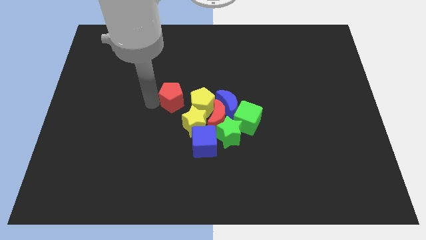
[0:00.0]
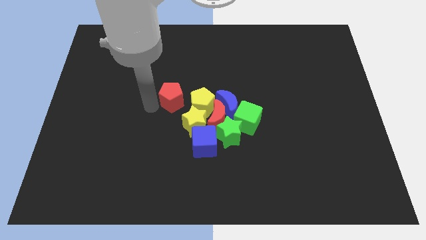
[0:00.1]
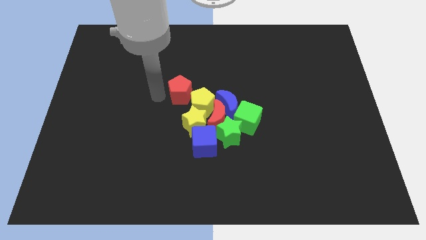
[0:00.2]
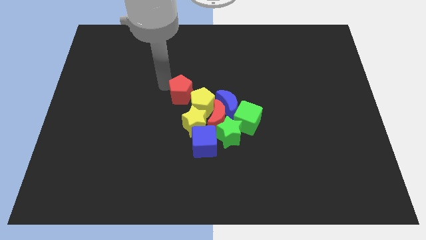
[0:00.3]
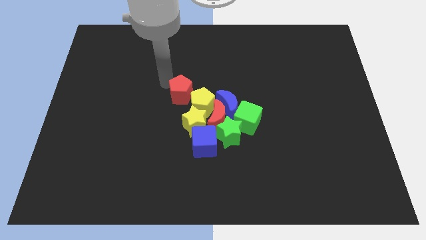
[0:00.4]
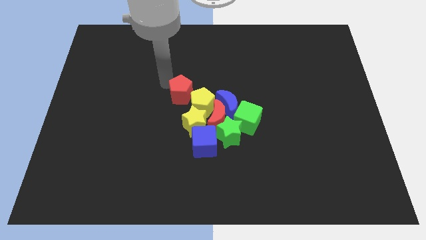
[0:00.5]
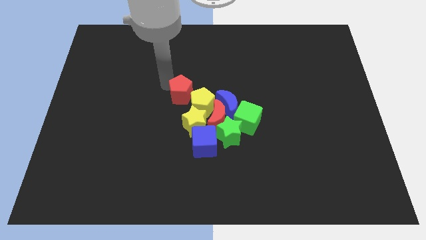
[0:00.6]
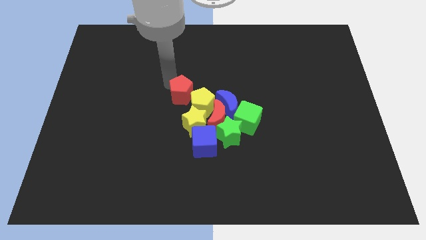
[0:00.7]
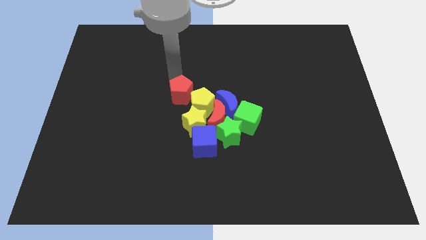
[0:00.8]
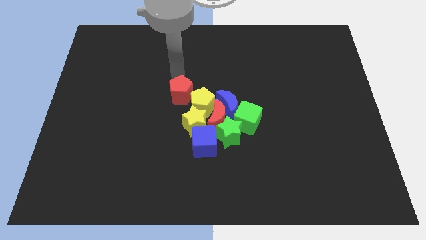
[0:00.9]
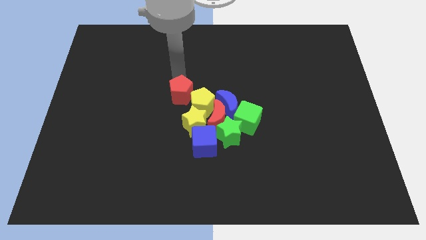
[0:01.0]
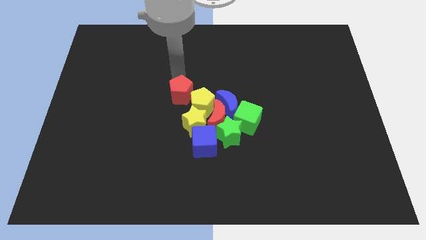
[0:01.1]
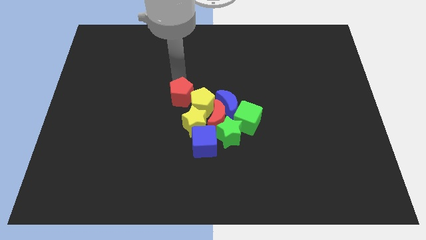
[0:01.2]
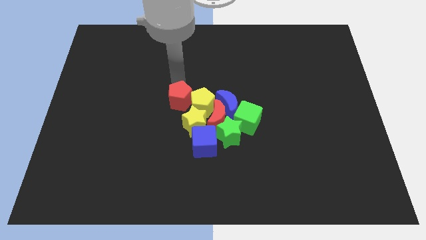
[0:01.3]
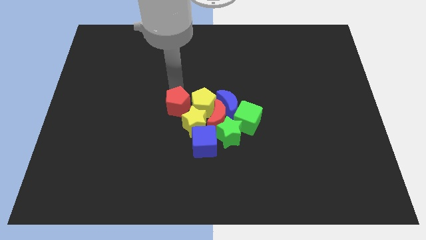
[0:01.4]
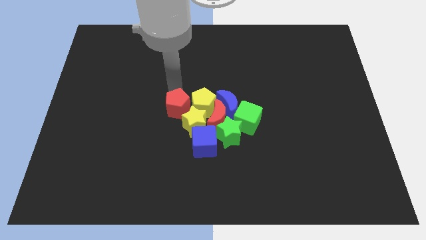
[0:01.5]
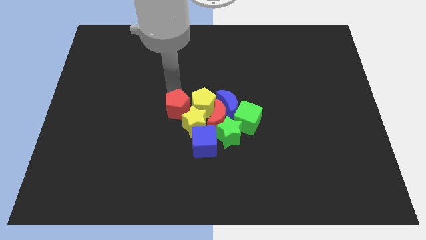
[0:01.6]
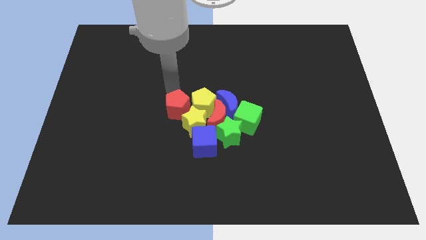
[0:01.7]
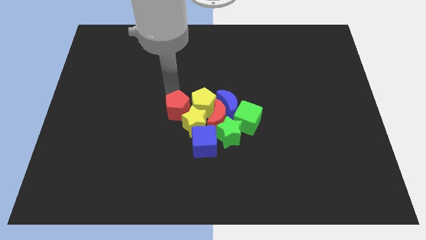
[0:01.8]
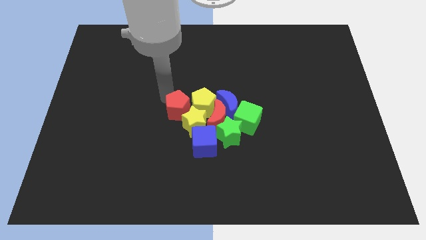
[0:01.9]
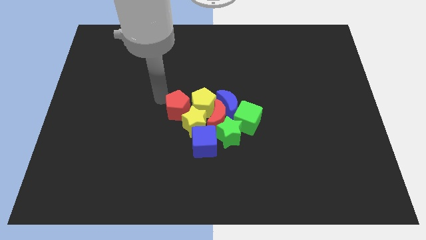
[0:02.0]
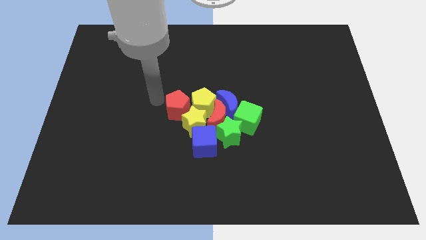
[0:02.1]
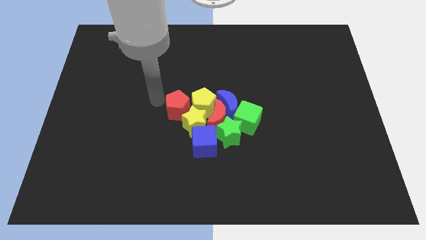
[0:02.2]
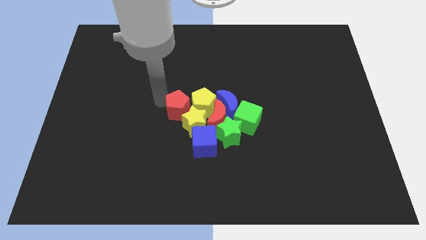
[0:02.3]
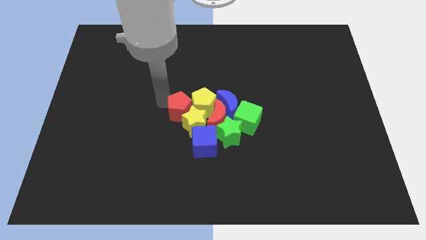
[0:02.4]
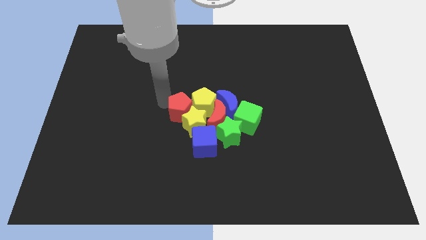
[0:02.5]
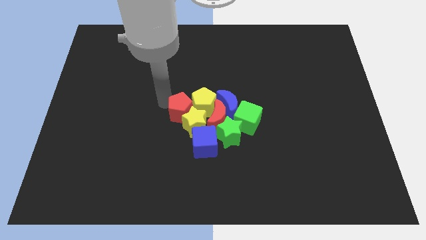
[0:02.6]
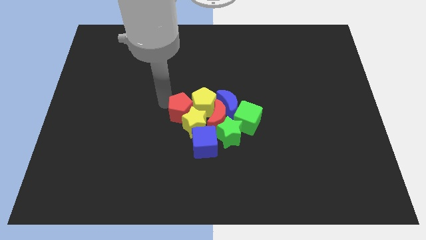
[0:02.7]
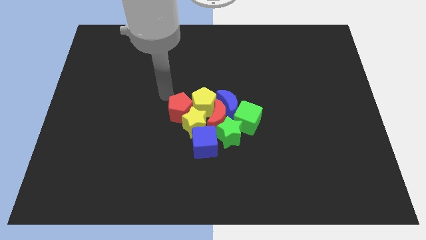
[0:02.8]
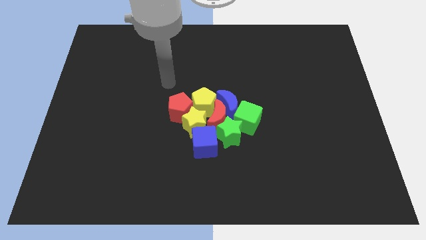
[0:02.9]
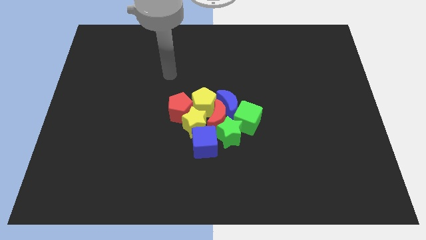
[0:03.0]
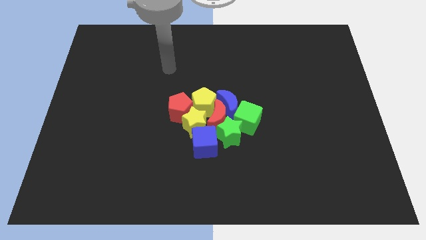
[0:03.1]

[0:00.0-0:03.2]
drag red pentagon into the group of blocks

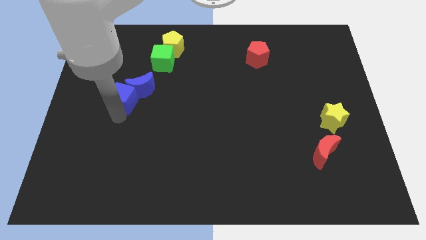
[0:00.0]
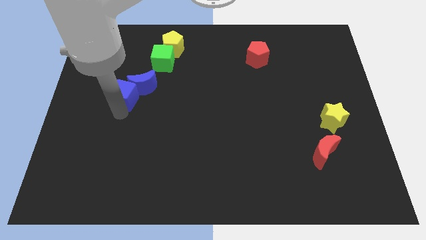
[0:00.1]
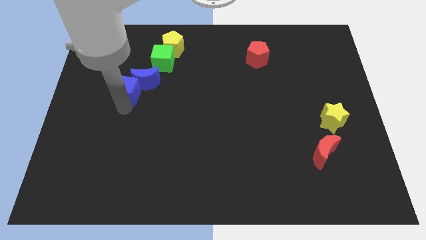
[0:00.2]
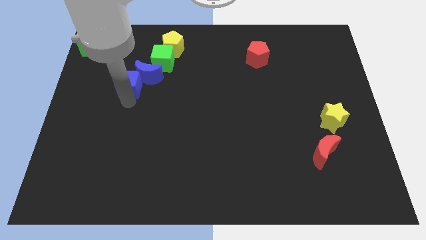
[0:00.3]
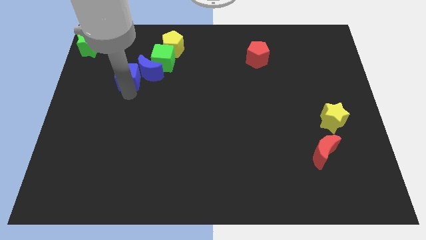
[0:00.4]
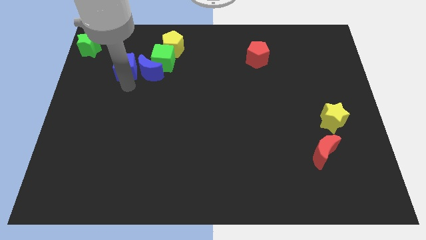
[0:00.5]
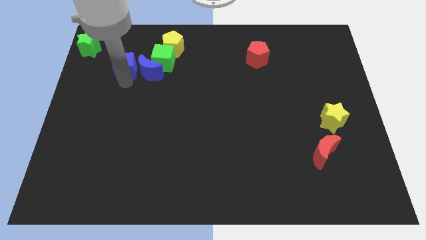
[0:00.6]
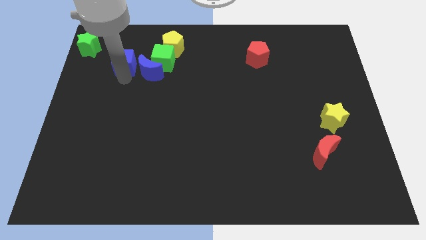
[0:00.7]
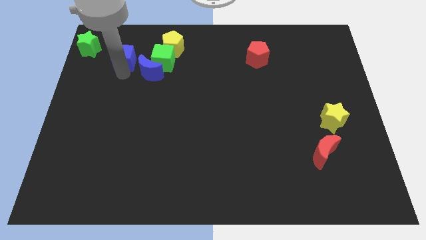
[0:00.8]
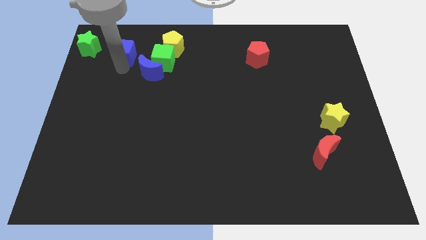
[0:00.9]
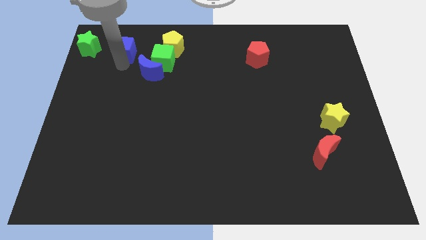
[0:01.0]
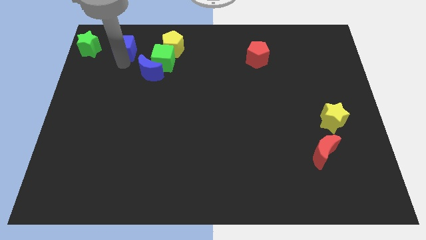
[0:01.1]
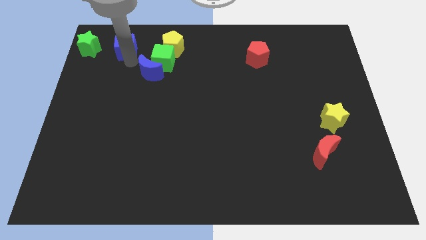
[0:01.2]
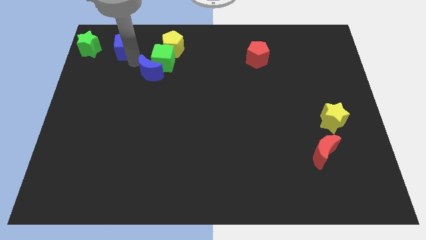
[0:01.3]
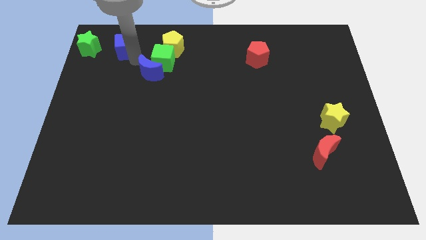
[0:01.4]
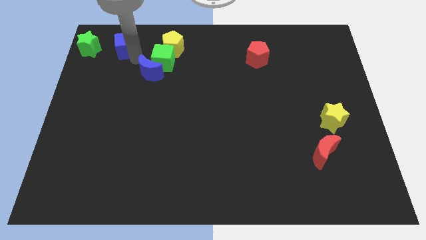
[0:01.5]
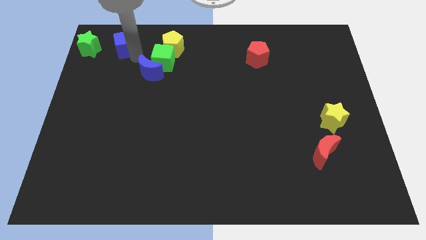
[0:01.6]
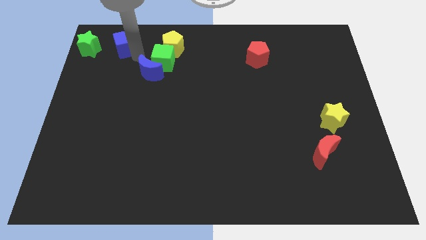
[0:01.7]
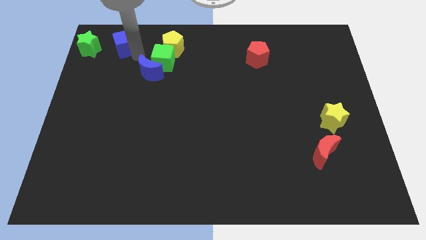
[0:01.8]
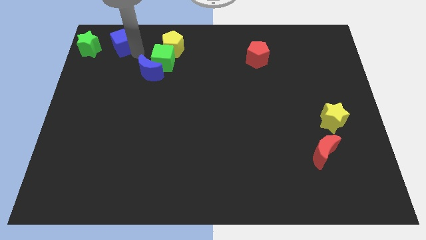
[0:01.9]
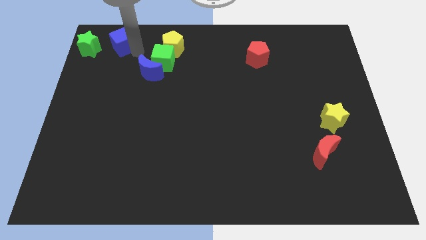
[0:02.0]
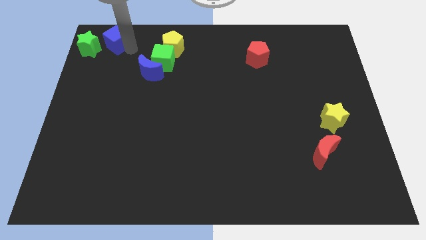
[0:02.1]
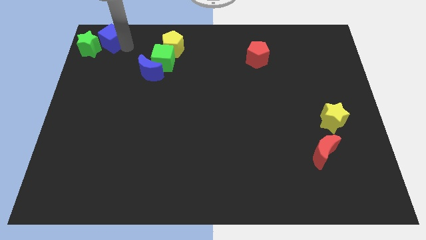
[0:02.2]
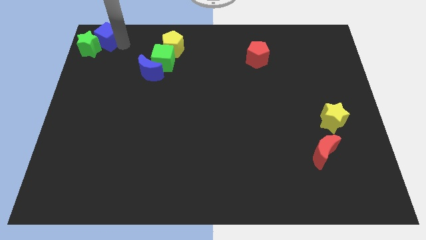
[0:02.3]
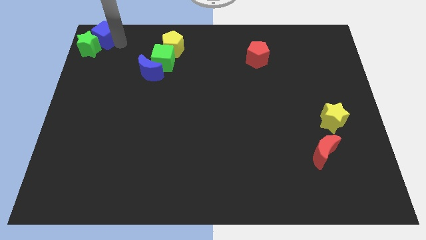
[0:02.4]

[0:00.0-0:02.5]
place the blue cube to the top right of the green star

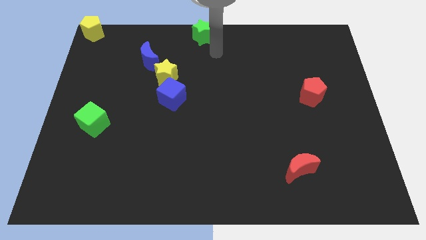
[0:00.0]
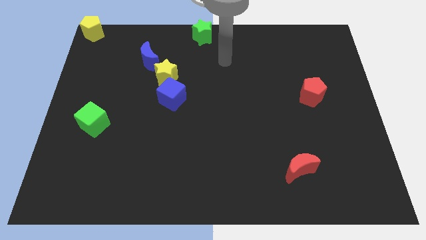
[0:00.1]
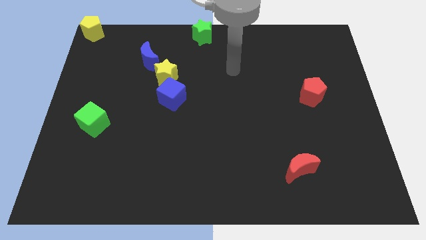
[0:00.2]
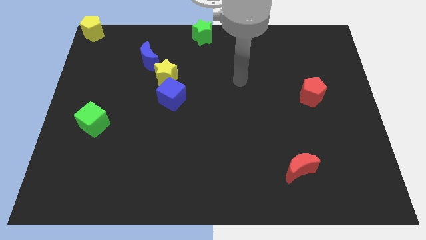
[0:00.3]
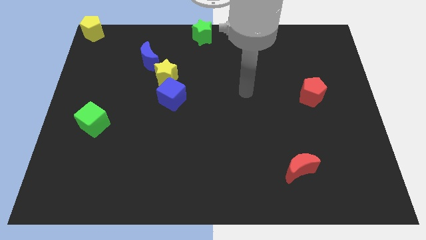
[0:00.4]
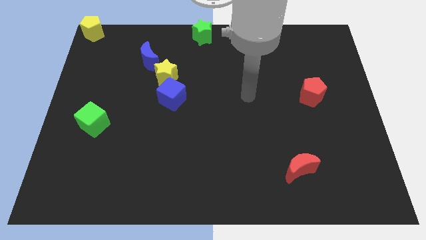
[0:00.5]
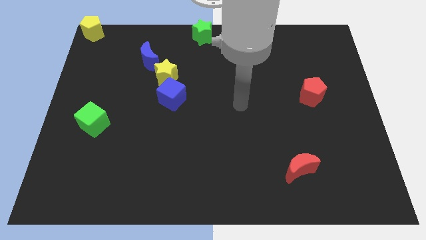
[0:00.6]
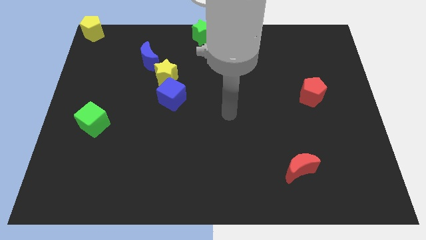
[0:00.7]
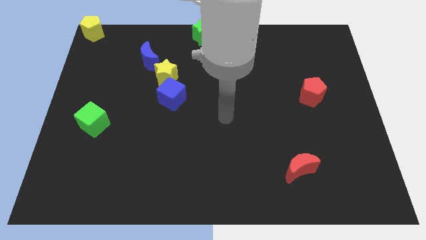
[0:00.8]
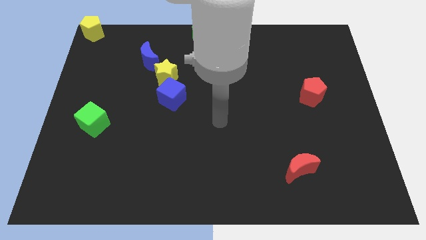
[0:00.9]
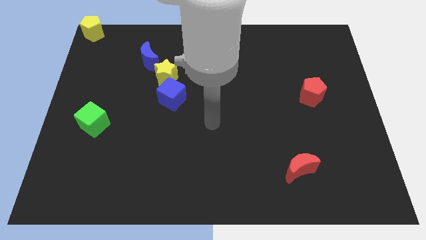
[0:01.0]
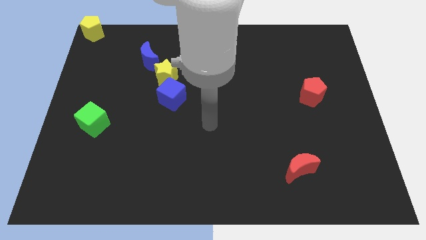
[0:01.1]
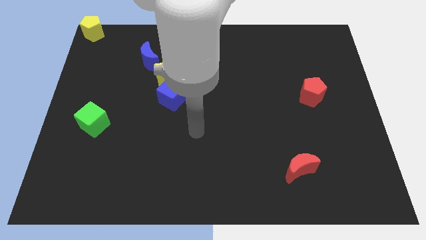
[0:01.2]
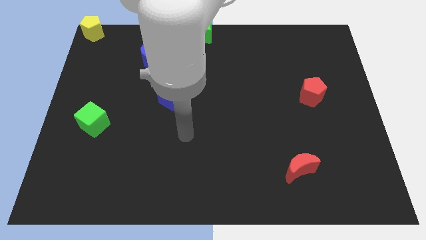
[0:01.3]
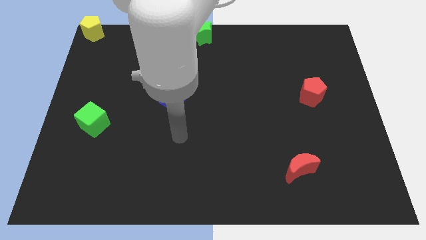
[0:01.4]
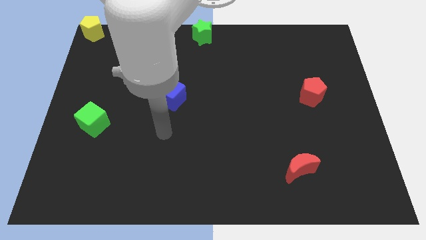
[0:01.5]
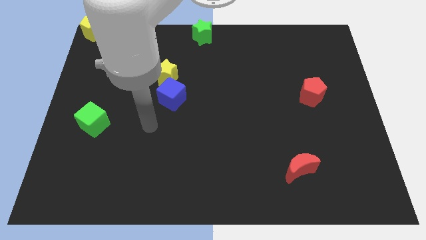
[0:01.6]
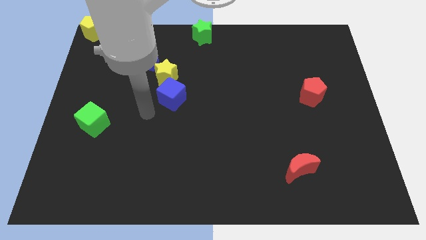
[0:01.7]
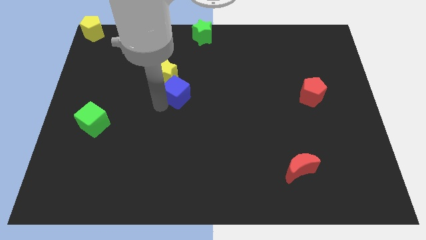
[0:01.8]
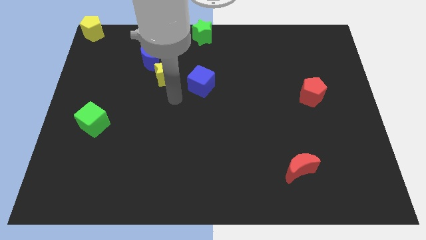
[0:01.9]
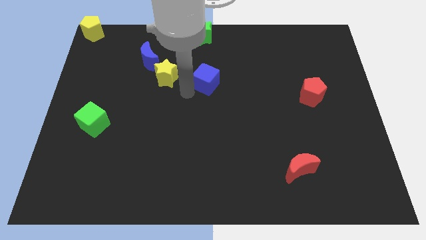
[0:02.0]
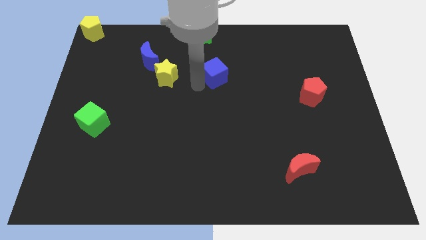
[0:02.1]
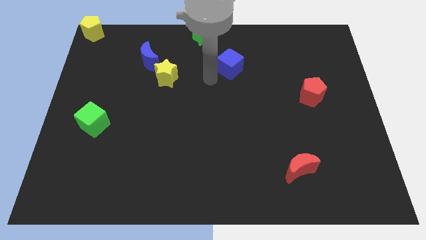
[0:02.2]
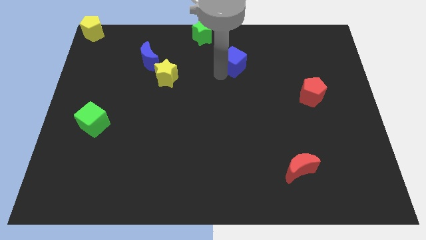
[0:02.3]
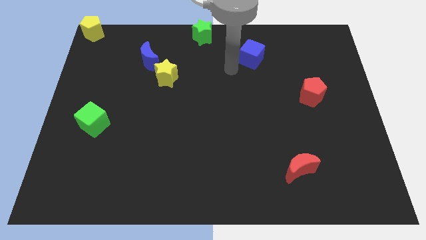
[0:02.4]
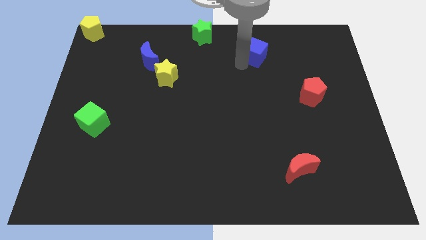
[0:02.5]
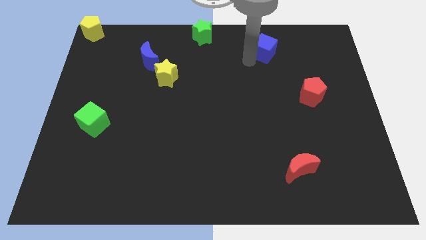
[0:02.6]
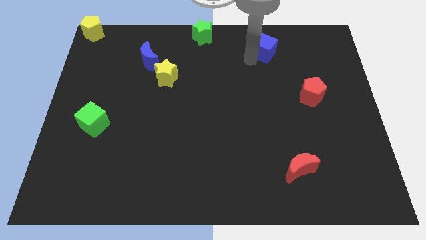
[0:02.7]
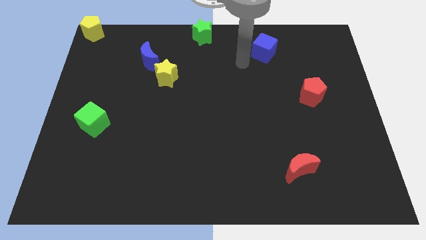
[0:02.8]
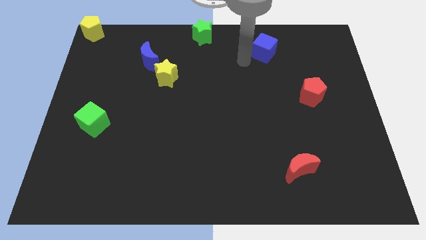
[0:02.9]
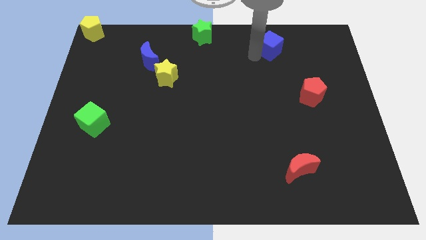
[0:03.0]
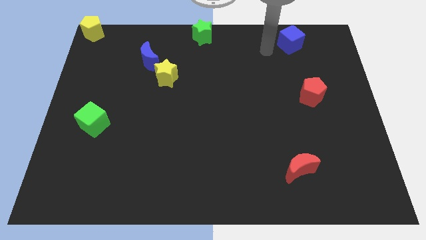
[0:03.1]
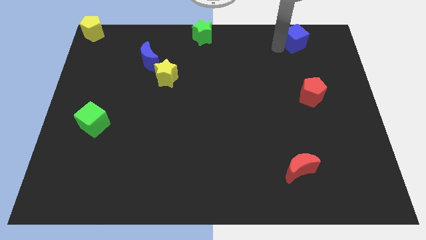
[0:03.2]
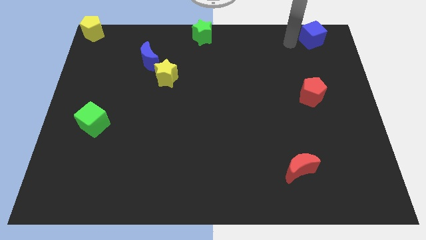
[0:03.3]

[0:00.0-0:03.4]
move the blue cube to the top of the red pentagon
